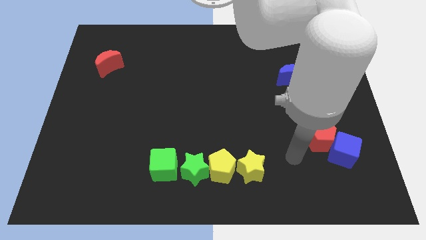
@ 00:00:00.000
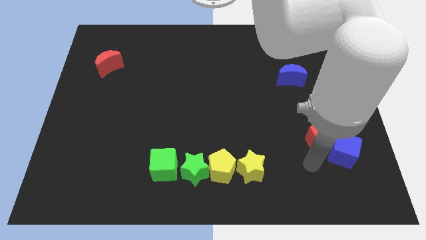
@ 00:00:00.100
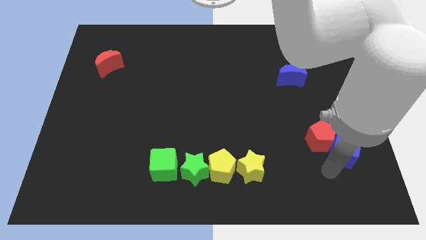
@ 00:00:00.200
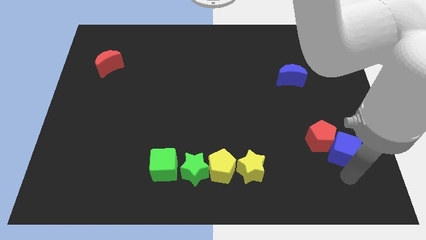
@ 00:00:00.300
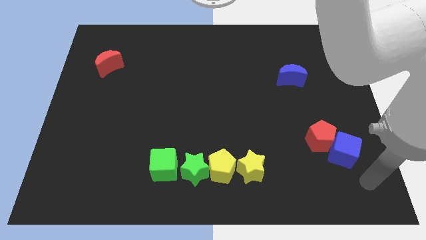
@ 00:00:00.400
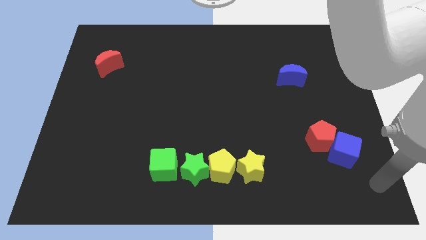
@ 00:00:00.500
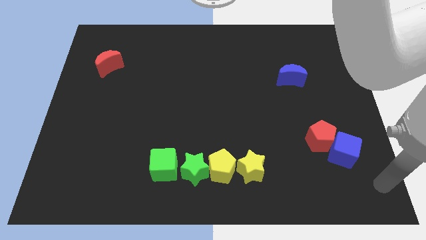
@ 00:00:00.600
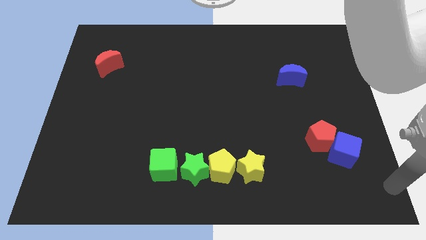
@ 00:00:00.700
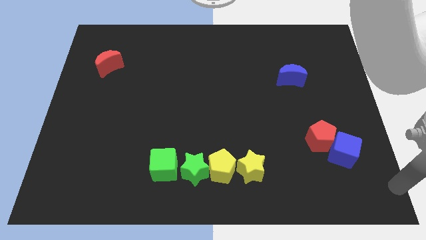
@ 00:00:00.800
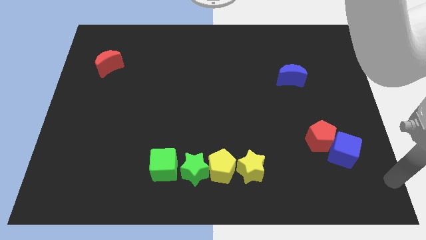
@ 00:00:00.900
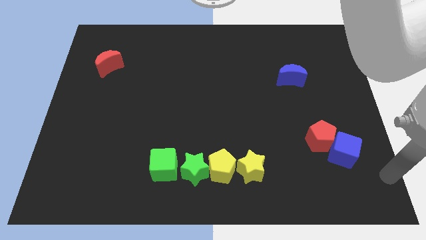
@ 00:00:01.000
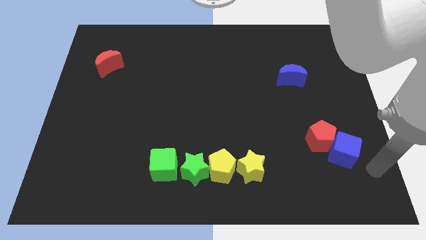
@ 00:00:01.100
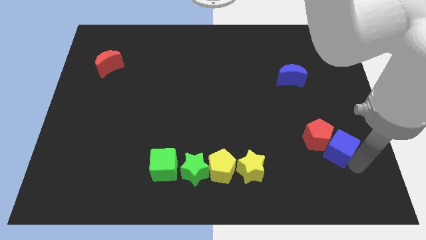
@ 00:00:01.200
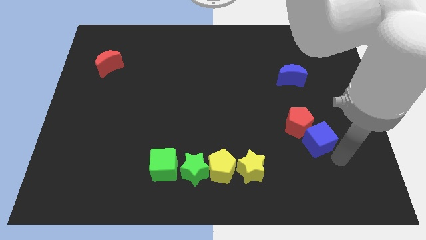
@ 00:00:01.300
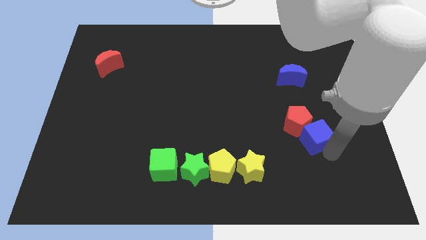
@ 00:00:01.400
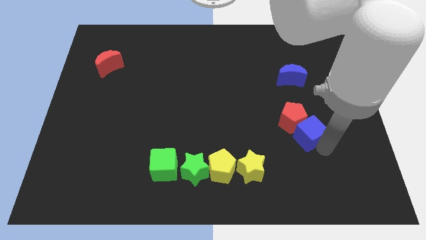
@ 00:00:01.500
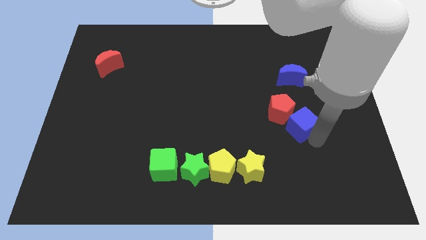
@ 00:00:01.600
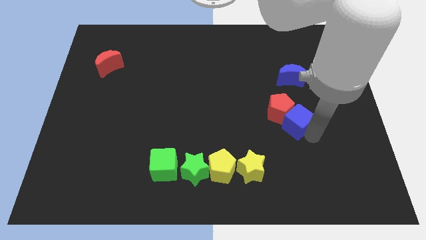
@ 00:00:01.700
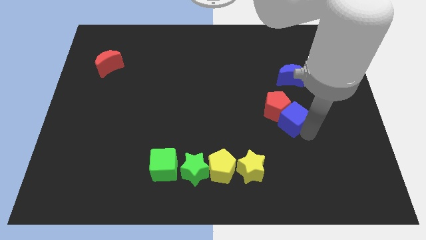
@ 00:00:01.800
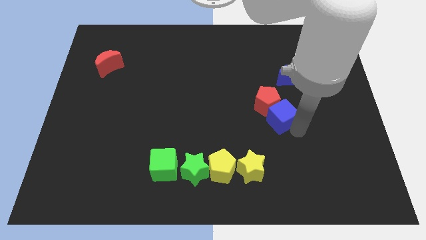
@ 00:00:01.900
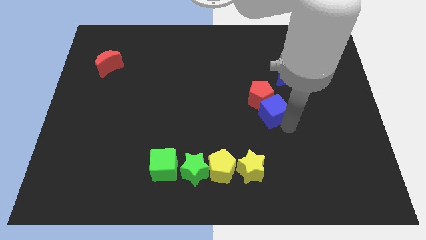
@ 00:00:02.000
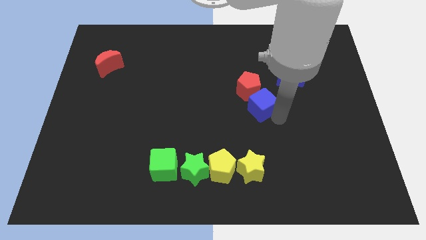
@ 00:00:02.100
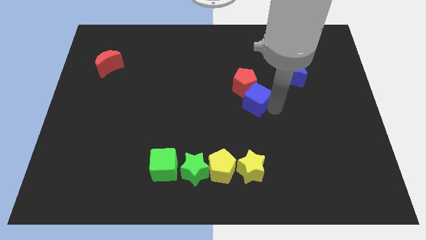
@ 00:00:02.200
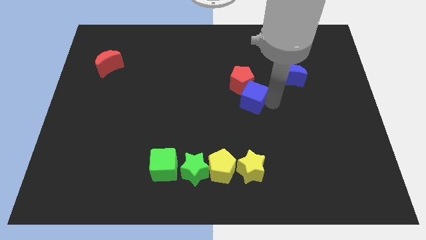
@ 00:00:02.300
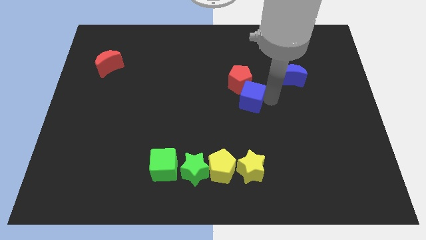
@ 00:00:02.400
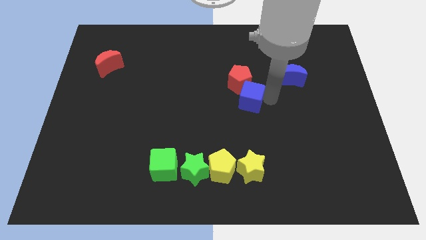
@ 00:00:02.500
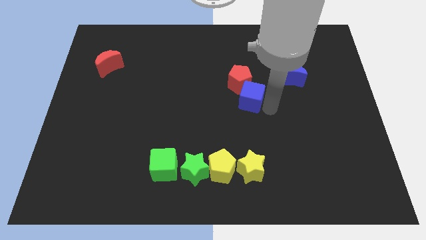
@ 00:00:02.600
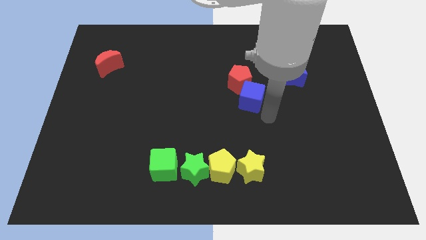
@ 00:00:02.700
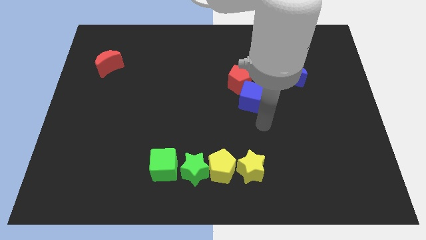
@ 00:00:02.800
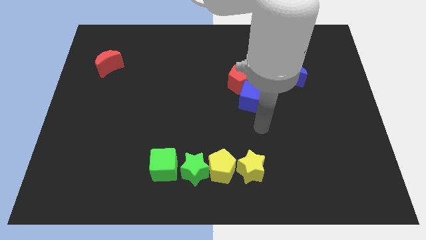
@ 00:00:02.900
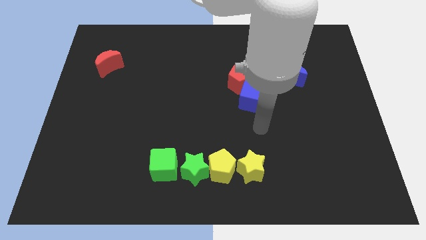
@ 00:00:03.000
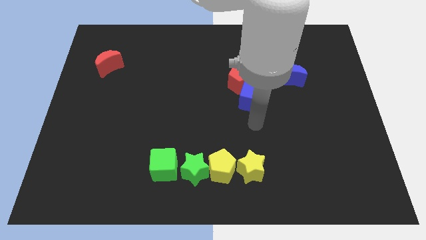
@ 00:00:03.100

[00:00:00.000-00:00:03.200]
slide the blue cube and the red pentagon towards the top center of the board

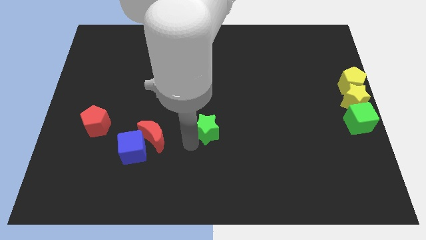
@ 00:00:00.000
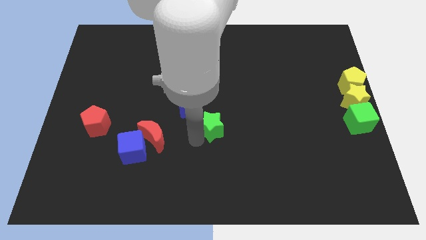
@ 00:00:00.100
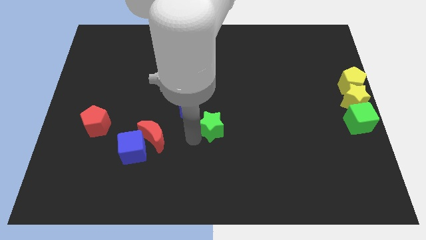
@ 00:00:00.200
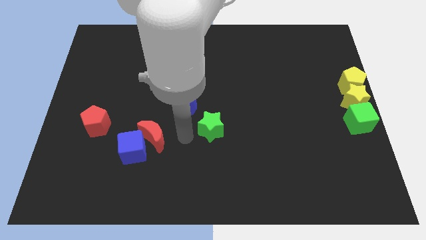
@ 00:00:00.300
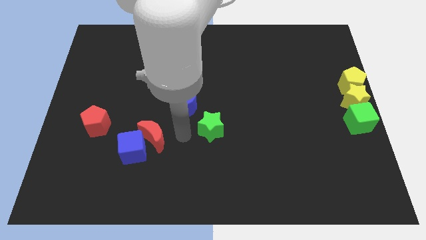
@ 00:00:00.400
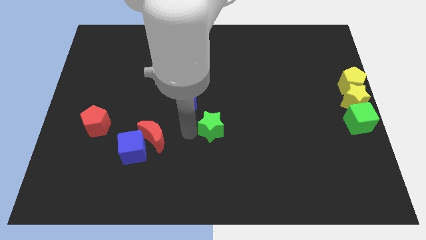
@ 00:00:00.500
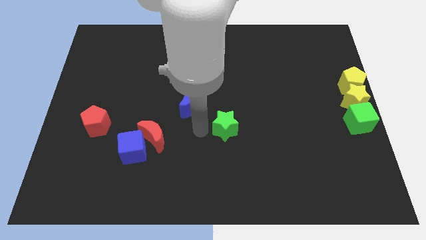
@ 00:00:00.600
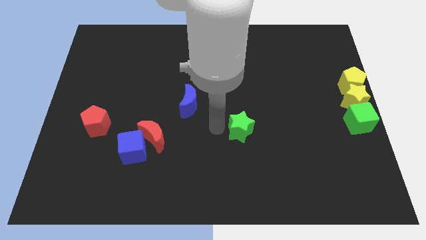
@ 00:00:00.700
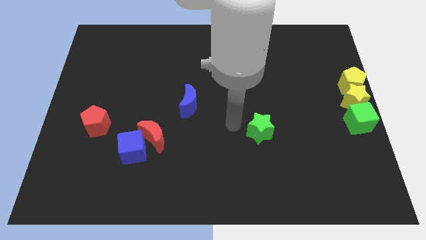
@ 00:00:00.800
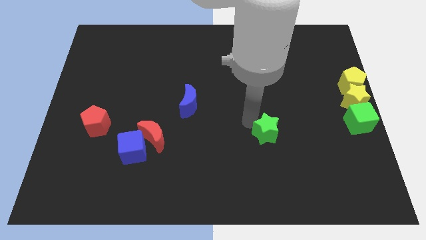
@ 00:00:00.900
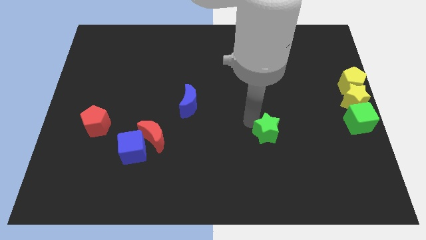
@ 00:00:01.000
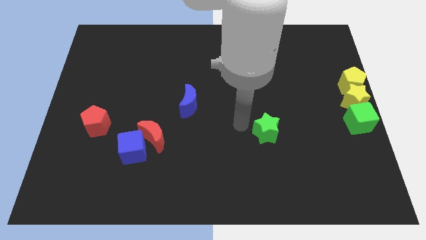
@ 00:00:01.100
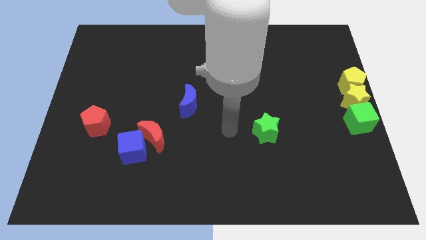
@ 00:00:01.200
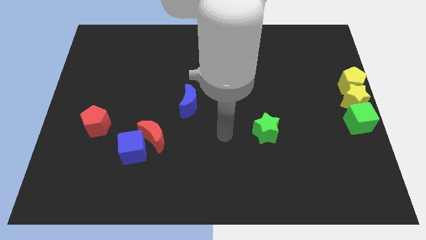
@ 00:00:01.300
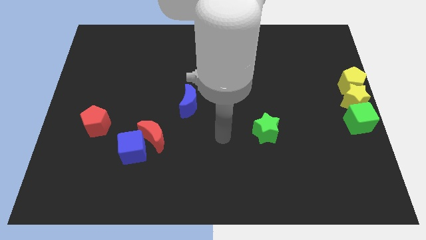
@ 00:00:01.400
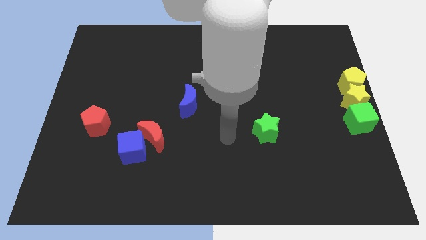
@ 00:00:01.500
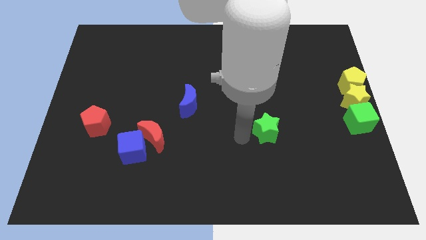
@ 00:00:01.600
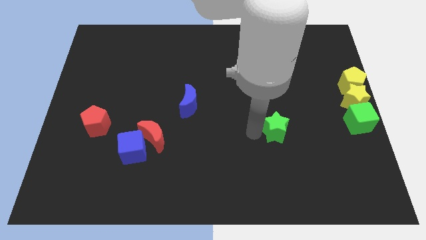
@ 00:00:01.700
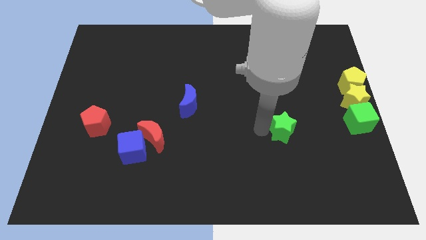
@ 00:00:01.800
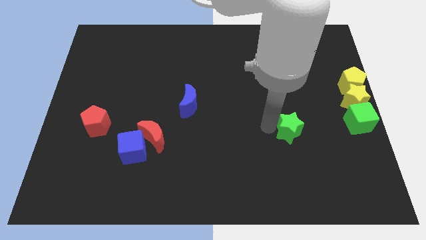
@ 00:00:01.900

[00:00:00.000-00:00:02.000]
move the green star slightly towards right center

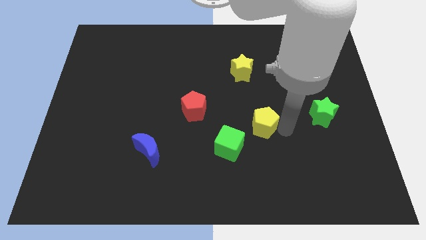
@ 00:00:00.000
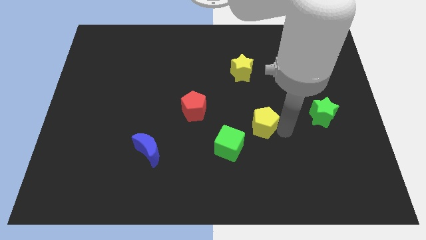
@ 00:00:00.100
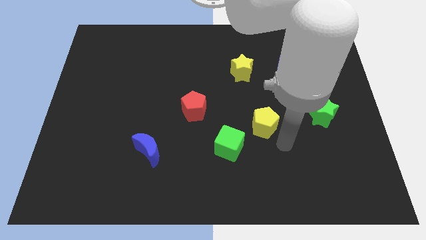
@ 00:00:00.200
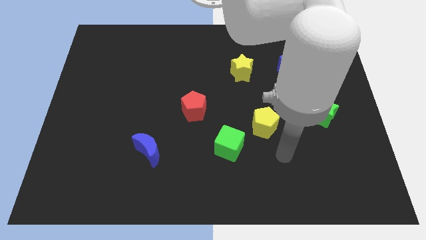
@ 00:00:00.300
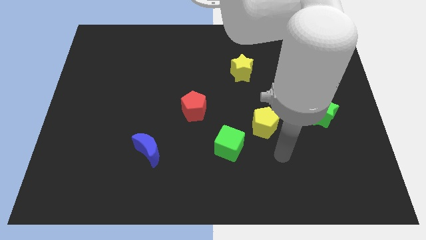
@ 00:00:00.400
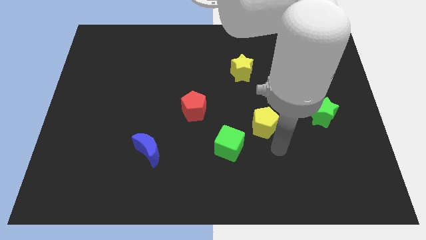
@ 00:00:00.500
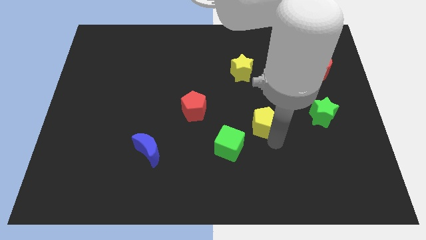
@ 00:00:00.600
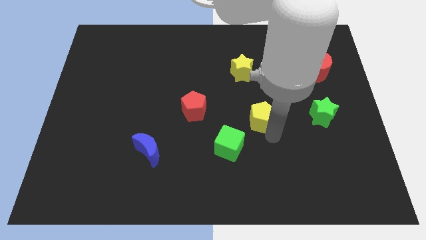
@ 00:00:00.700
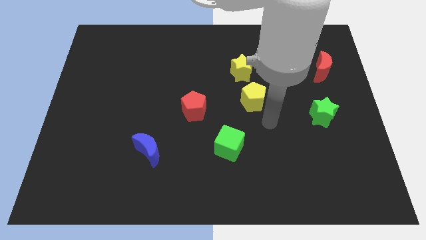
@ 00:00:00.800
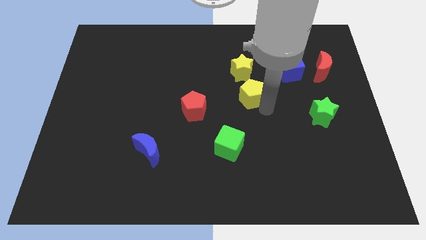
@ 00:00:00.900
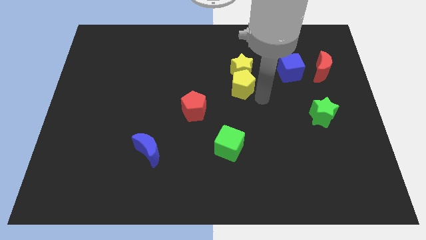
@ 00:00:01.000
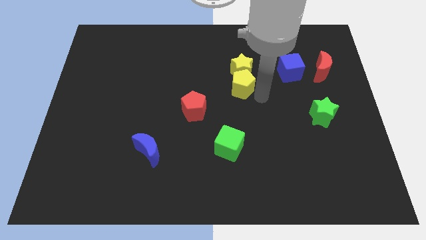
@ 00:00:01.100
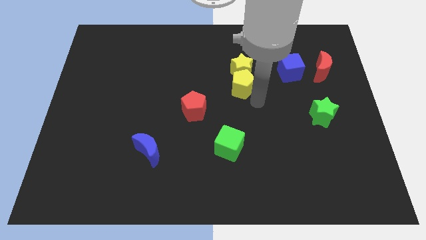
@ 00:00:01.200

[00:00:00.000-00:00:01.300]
push yellow pentagon into the yellow star

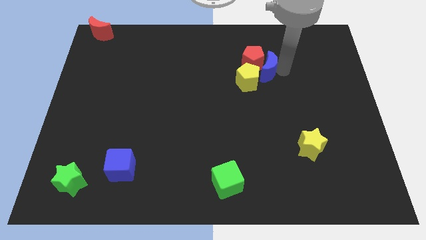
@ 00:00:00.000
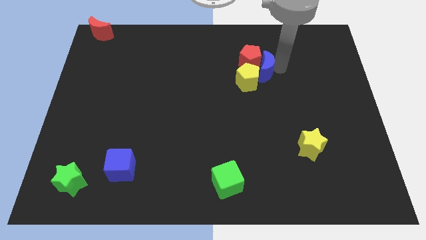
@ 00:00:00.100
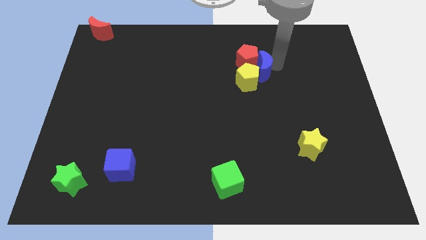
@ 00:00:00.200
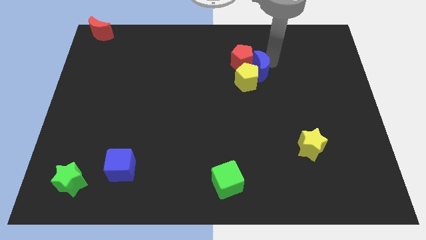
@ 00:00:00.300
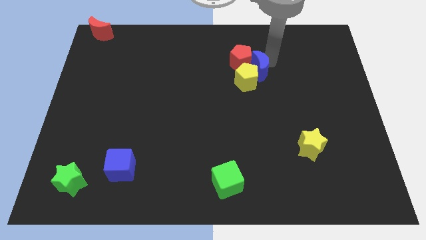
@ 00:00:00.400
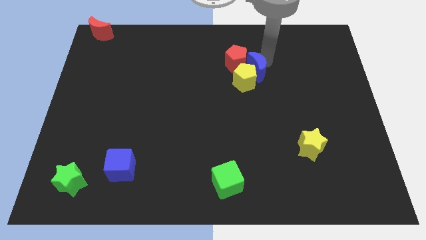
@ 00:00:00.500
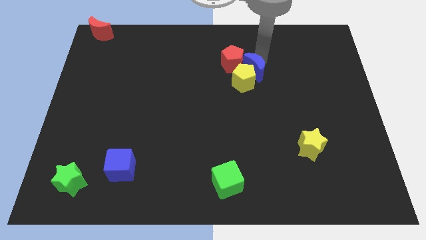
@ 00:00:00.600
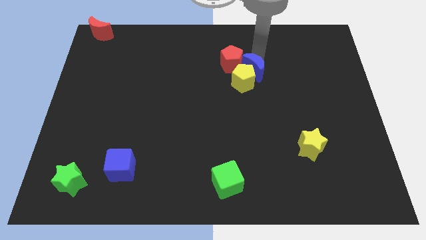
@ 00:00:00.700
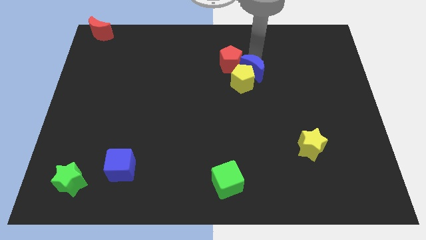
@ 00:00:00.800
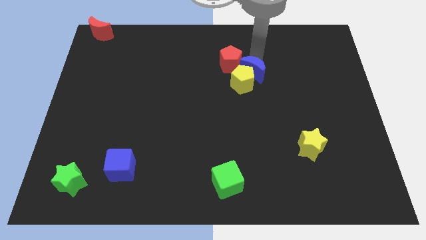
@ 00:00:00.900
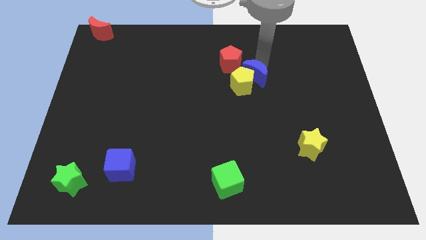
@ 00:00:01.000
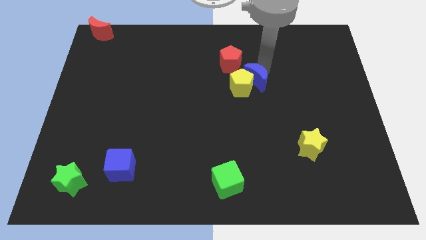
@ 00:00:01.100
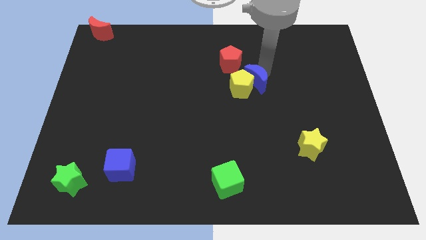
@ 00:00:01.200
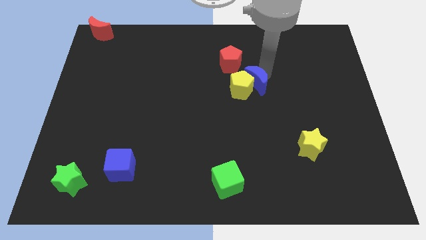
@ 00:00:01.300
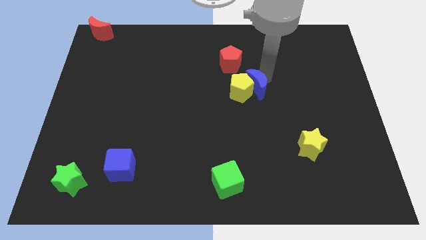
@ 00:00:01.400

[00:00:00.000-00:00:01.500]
drag the blue moon slightly downwards

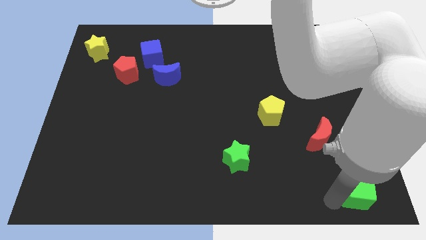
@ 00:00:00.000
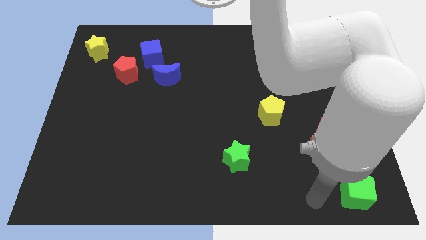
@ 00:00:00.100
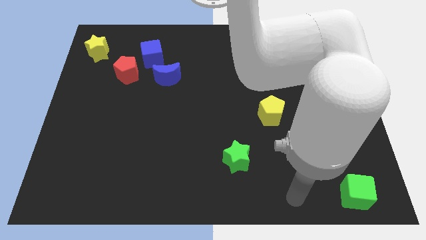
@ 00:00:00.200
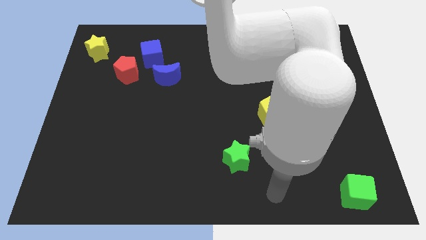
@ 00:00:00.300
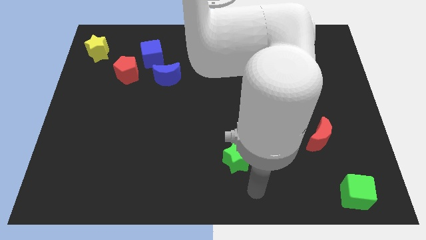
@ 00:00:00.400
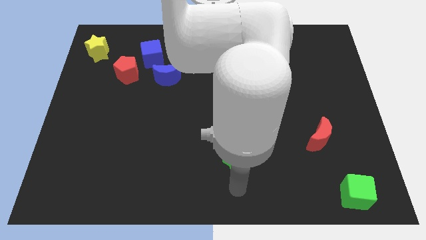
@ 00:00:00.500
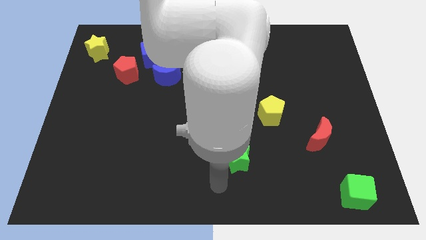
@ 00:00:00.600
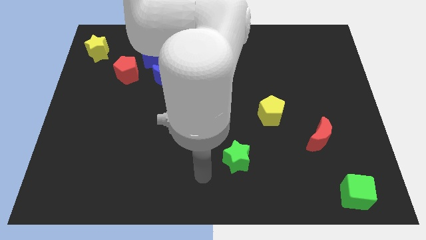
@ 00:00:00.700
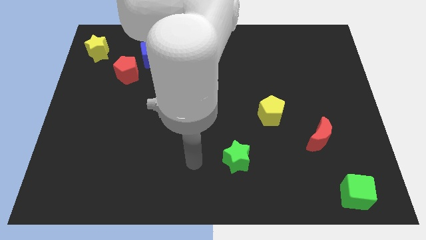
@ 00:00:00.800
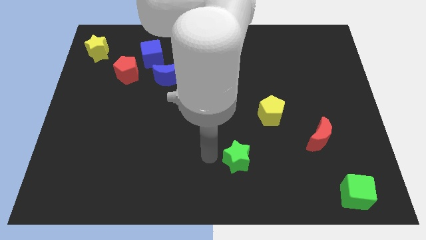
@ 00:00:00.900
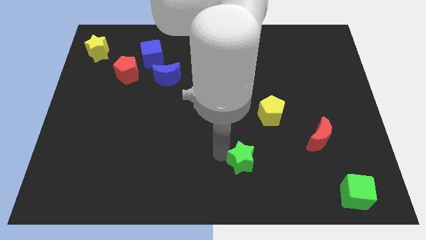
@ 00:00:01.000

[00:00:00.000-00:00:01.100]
move your arm to the left of green star
